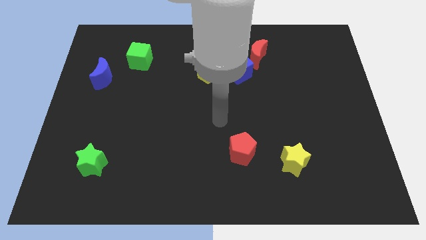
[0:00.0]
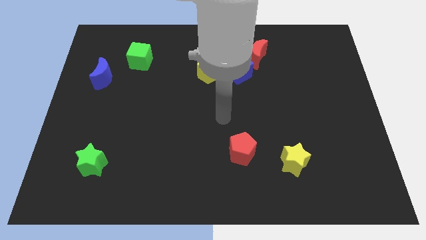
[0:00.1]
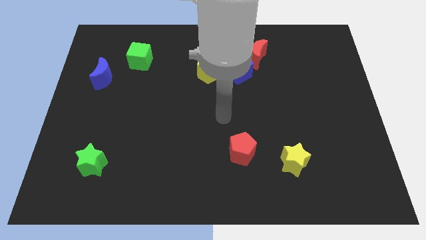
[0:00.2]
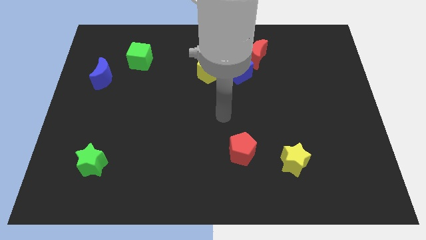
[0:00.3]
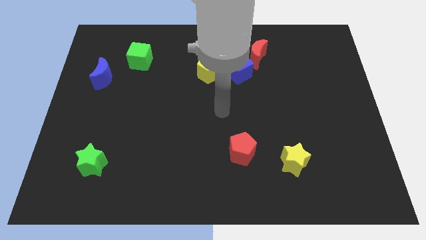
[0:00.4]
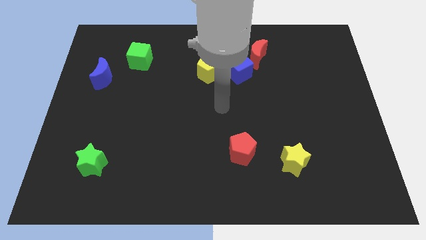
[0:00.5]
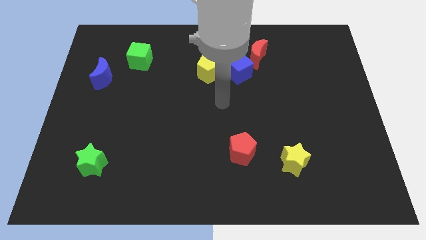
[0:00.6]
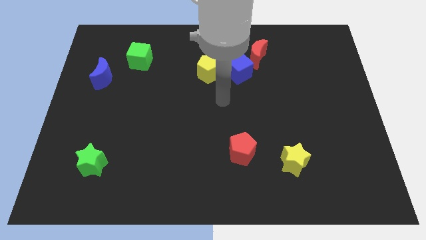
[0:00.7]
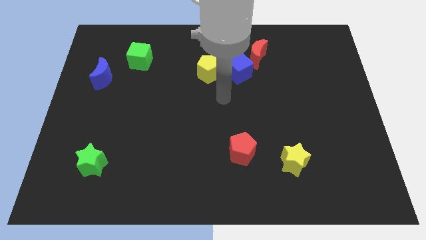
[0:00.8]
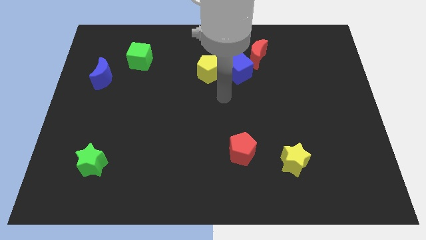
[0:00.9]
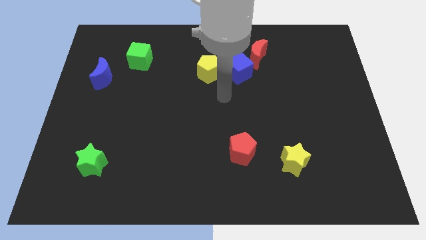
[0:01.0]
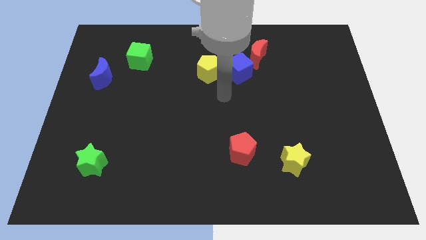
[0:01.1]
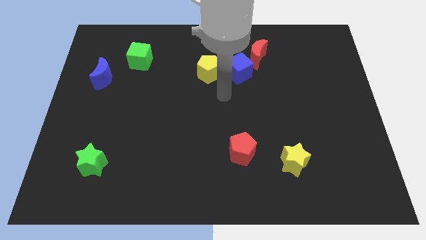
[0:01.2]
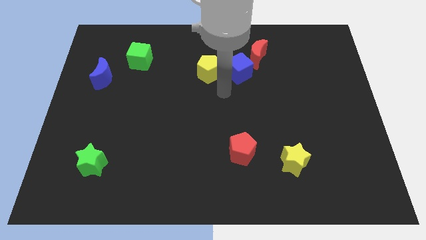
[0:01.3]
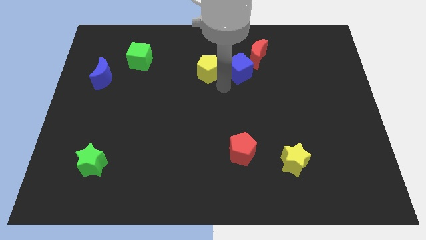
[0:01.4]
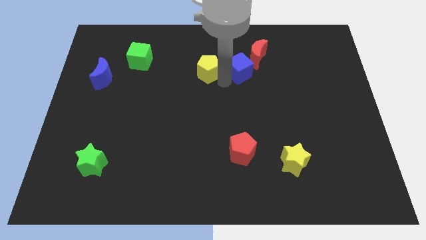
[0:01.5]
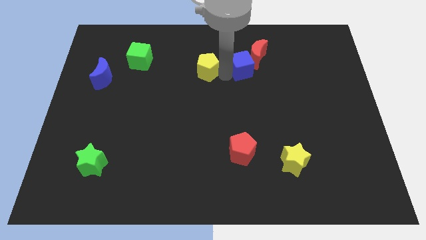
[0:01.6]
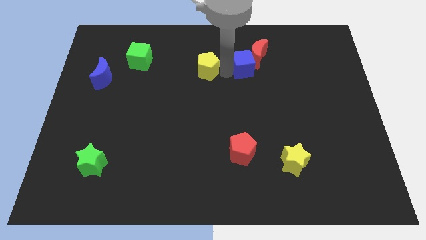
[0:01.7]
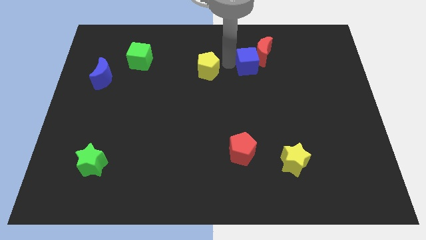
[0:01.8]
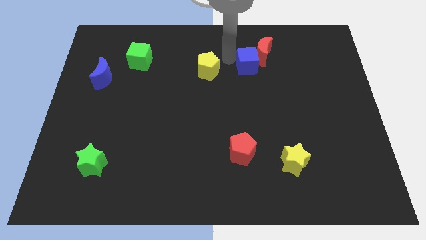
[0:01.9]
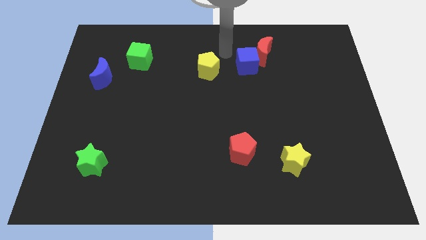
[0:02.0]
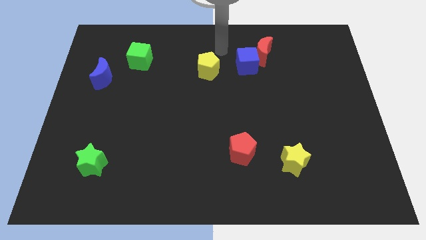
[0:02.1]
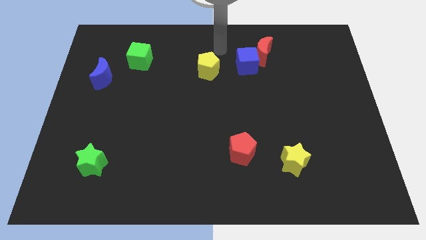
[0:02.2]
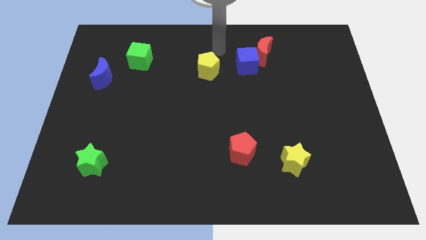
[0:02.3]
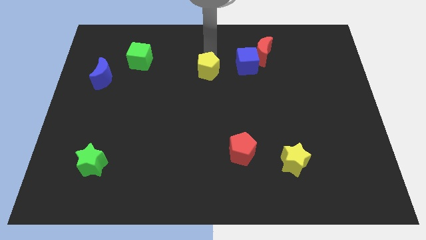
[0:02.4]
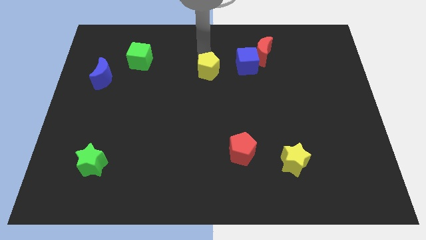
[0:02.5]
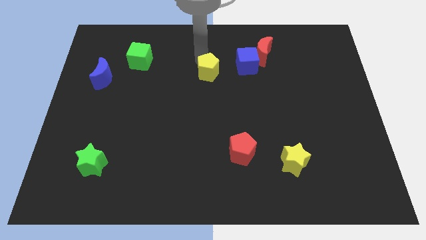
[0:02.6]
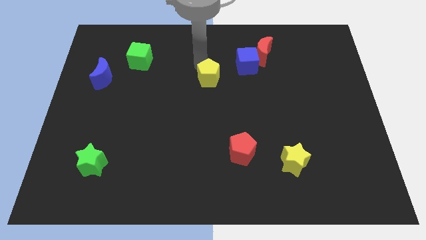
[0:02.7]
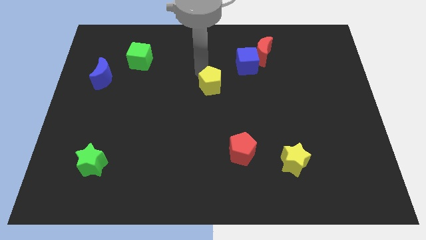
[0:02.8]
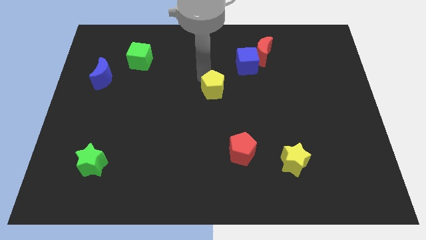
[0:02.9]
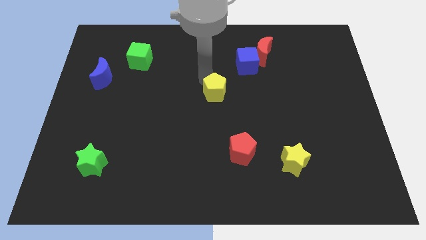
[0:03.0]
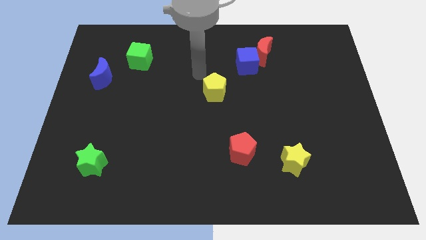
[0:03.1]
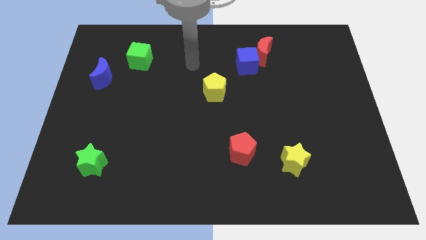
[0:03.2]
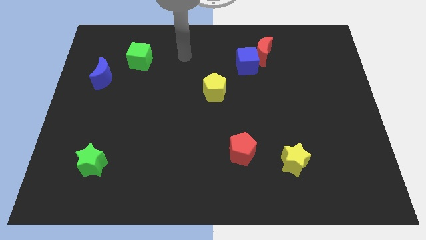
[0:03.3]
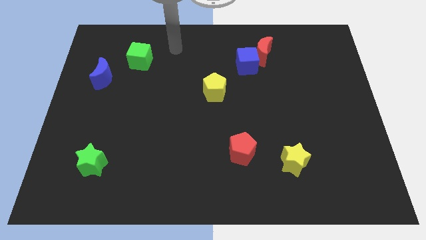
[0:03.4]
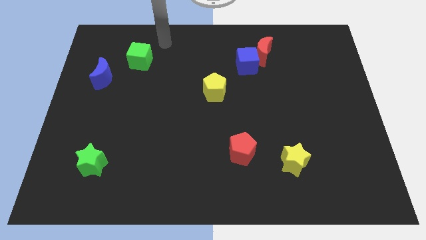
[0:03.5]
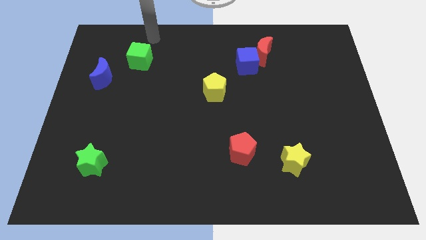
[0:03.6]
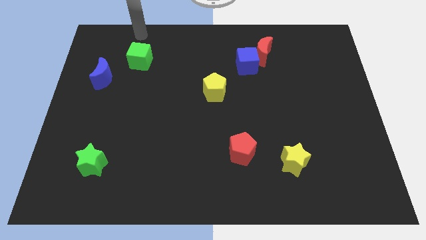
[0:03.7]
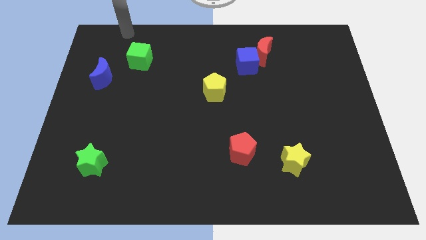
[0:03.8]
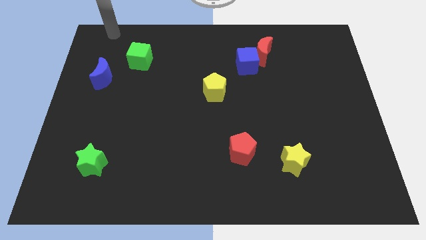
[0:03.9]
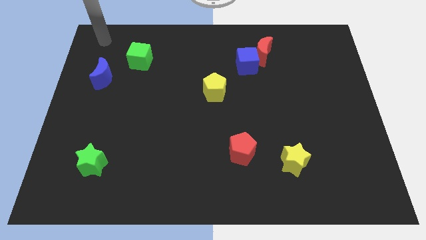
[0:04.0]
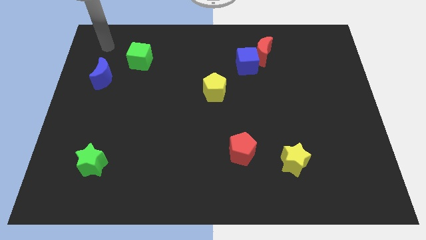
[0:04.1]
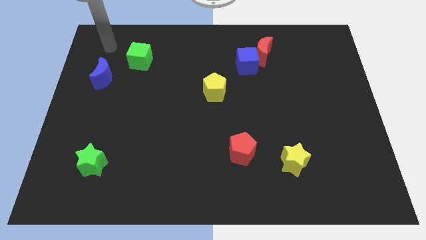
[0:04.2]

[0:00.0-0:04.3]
move the yellow pentagon towards the center of the board

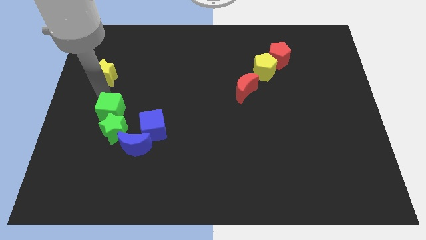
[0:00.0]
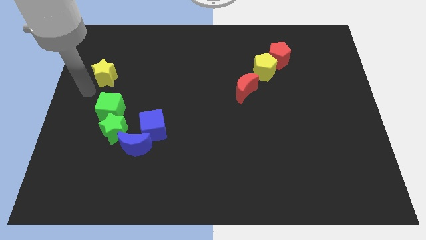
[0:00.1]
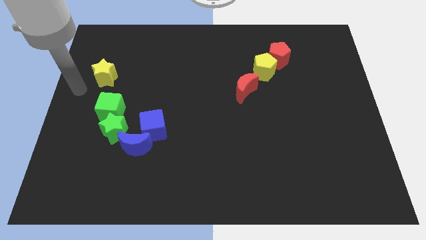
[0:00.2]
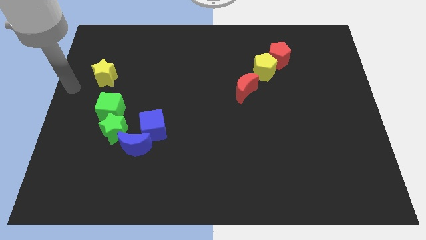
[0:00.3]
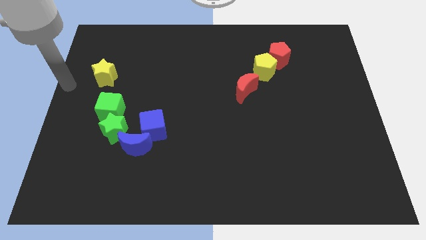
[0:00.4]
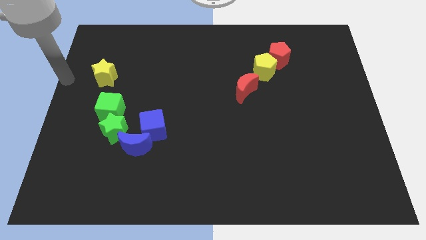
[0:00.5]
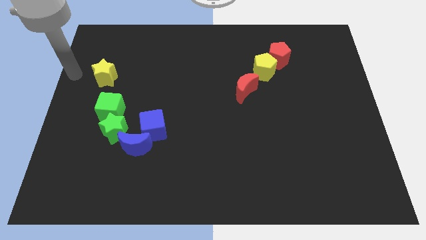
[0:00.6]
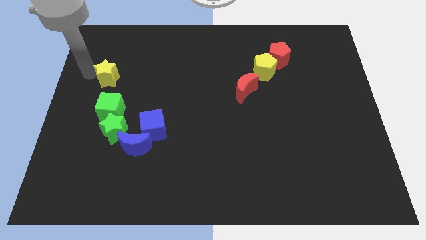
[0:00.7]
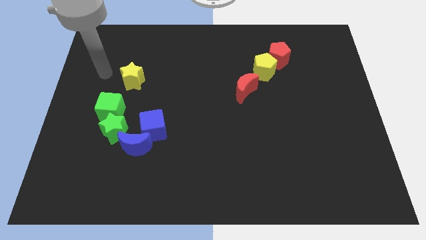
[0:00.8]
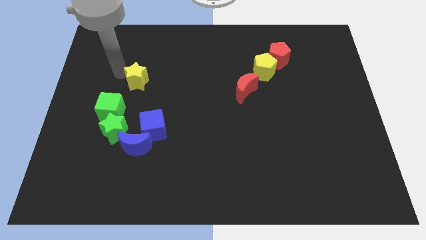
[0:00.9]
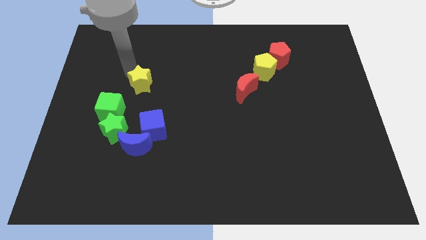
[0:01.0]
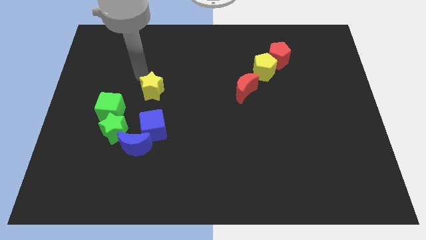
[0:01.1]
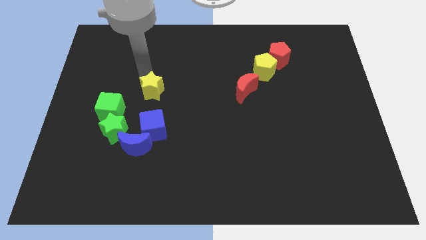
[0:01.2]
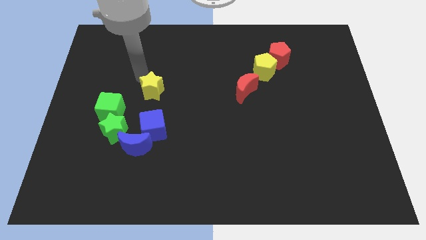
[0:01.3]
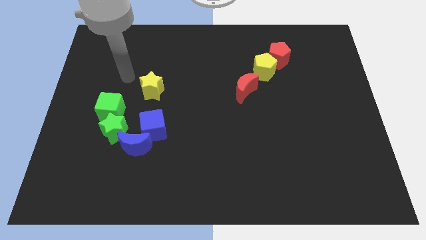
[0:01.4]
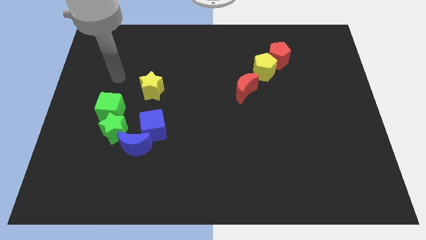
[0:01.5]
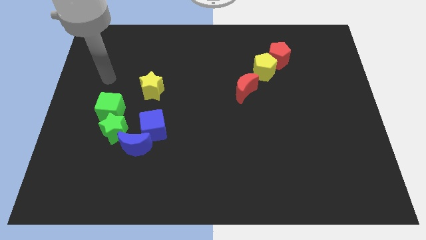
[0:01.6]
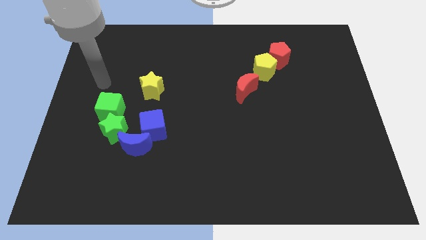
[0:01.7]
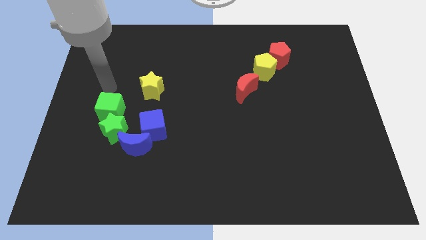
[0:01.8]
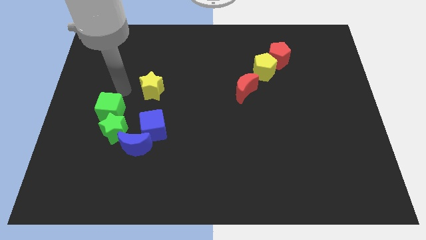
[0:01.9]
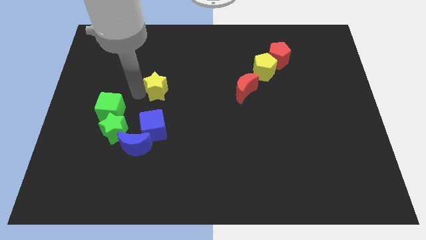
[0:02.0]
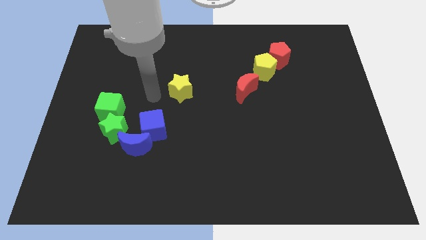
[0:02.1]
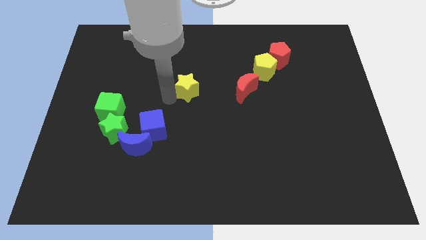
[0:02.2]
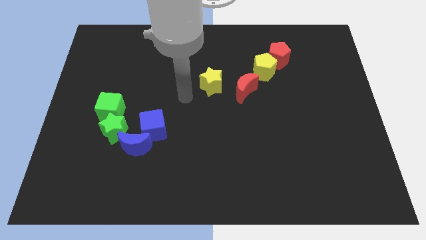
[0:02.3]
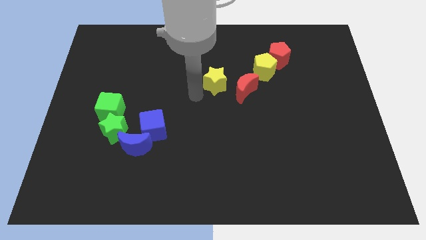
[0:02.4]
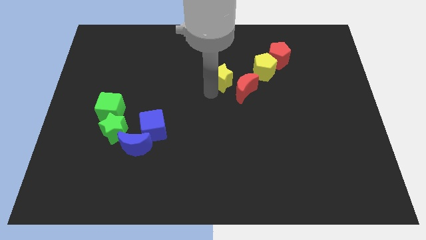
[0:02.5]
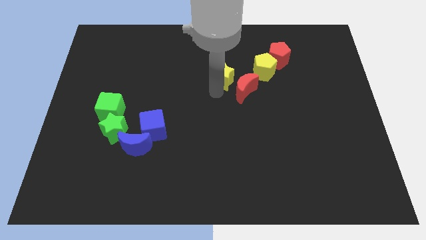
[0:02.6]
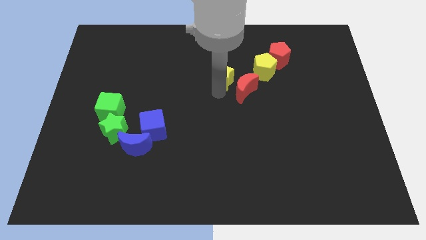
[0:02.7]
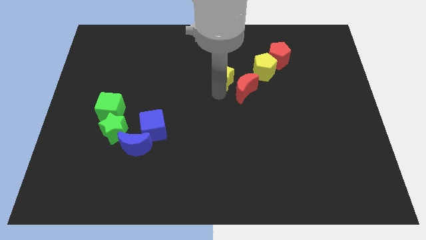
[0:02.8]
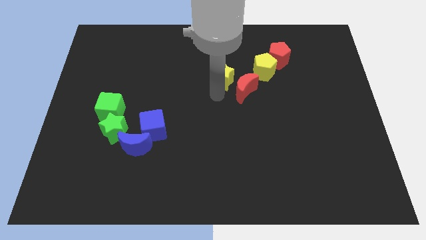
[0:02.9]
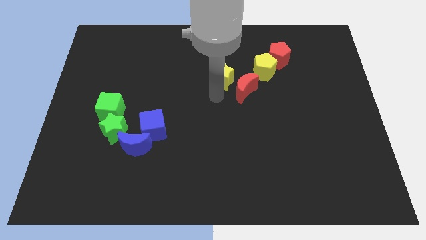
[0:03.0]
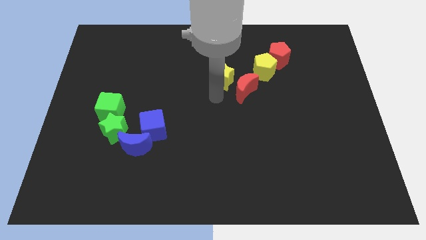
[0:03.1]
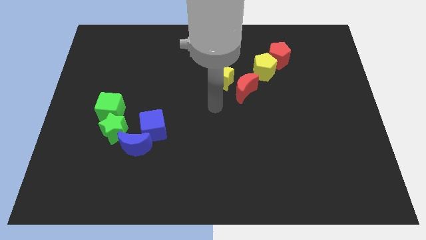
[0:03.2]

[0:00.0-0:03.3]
slide the yellow star diagonally top right to the blue cube

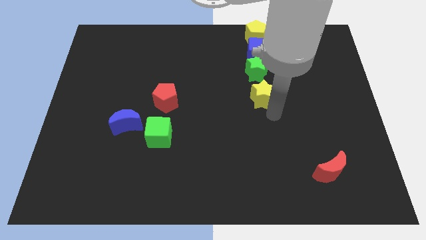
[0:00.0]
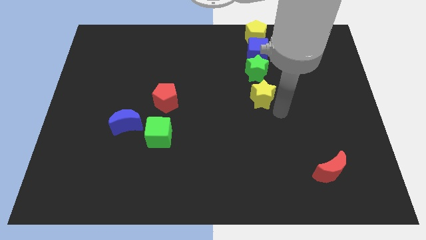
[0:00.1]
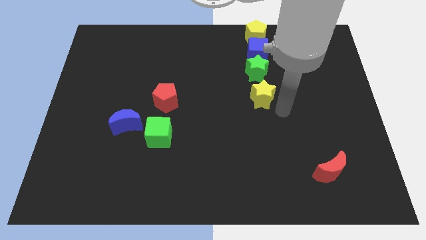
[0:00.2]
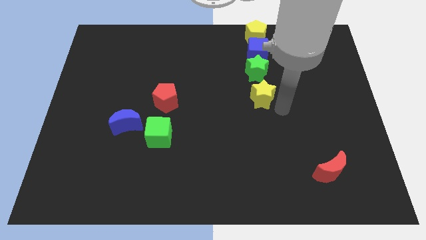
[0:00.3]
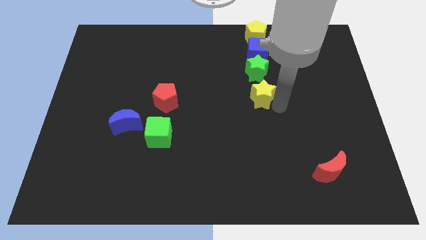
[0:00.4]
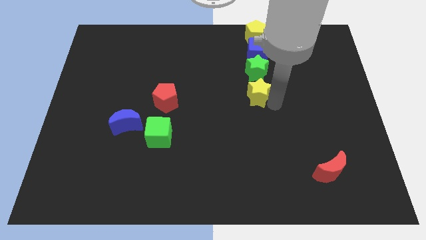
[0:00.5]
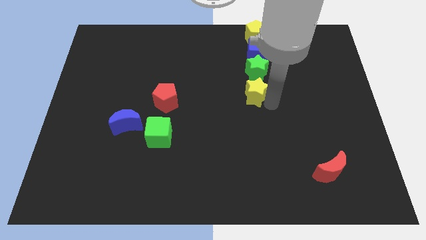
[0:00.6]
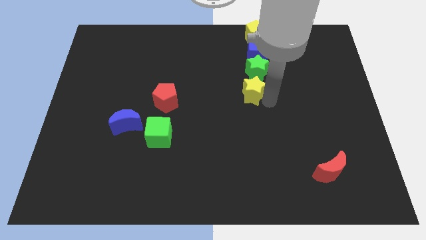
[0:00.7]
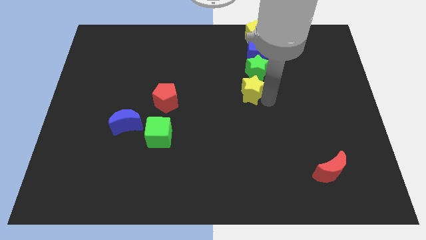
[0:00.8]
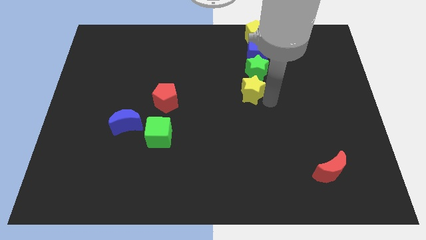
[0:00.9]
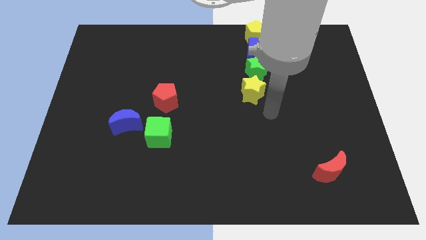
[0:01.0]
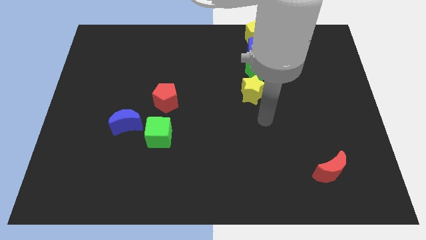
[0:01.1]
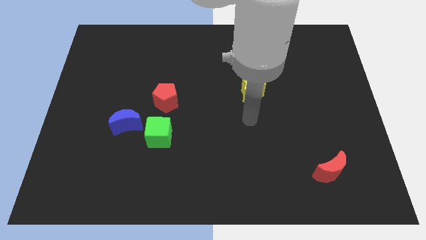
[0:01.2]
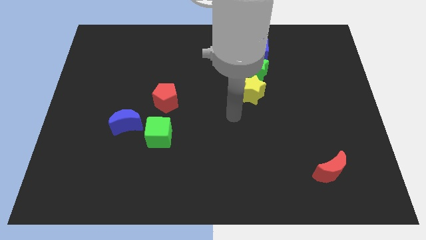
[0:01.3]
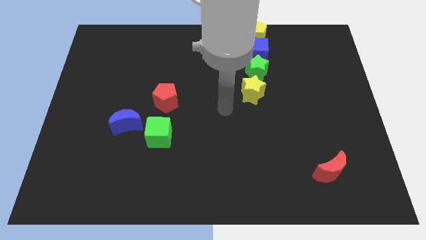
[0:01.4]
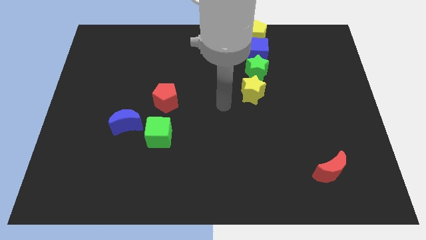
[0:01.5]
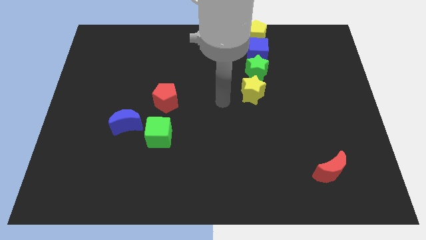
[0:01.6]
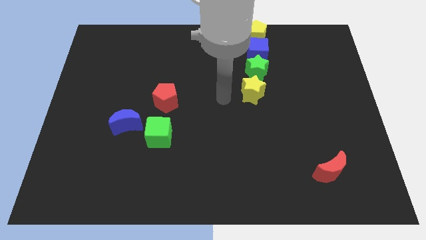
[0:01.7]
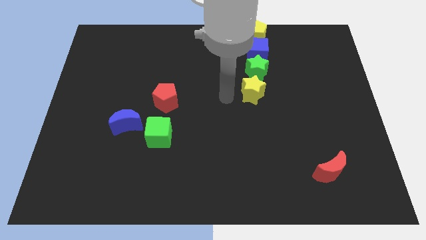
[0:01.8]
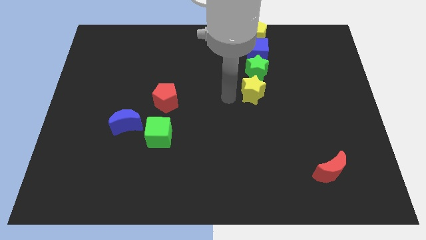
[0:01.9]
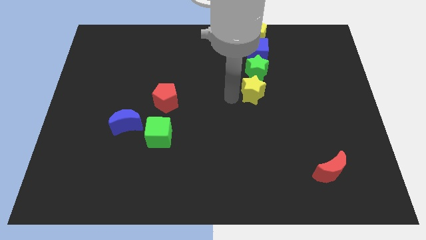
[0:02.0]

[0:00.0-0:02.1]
push yellow star into green star
